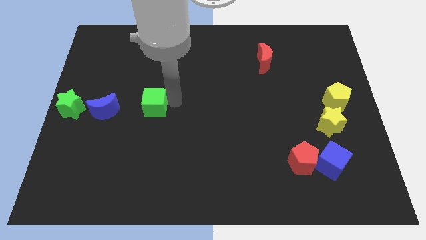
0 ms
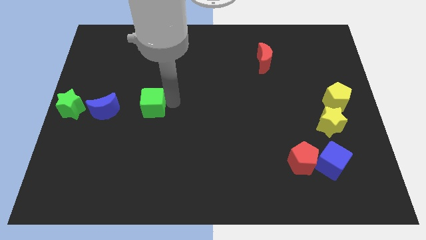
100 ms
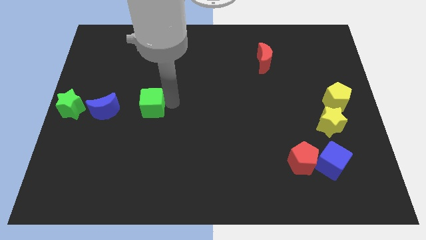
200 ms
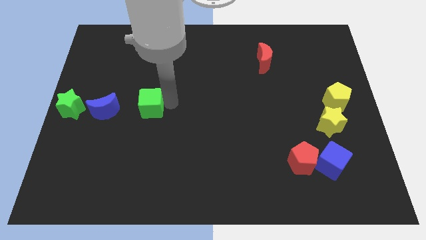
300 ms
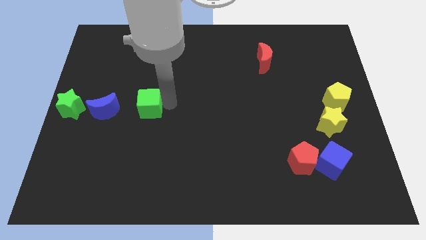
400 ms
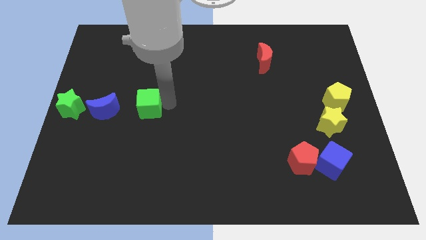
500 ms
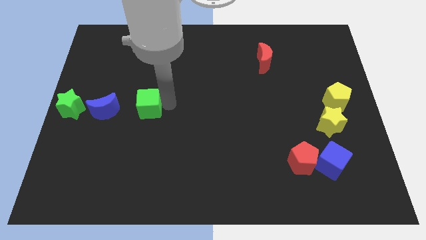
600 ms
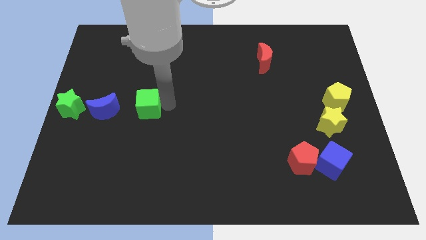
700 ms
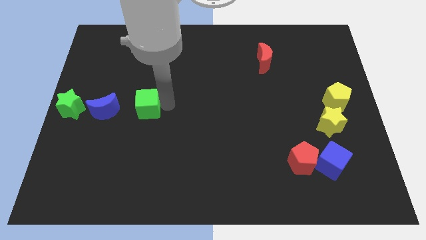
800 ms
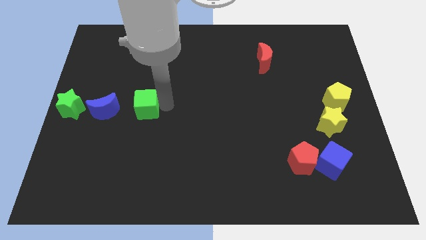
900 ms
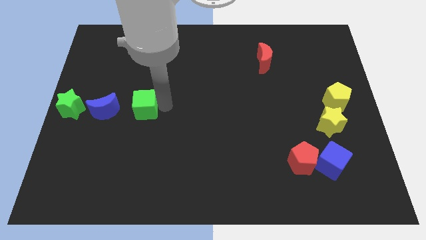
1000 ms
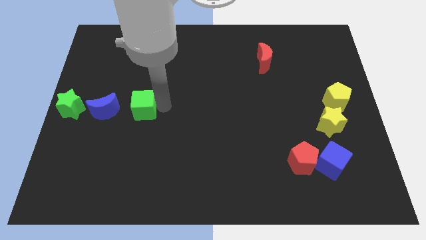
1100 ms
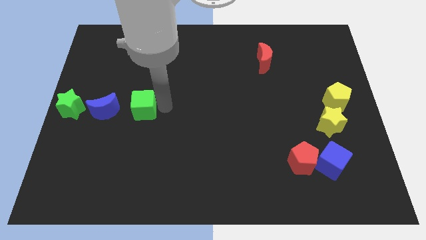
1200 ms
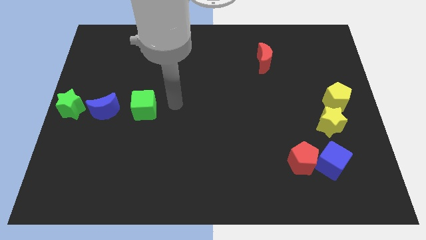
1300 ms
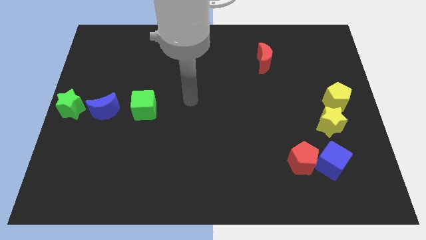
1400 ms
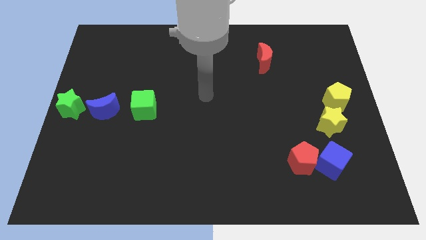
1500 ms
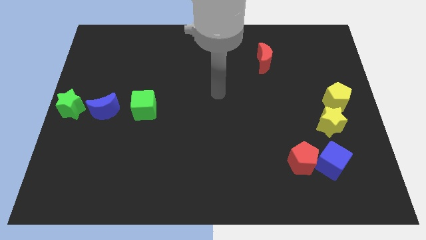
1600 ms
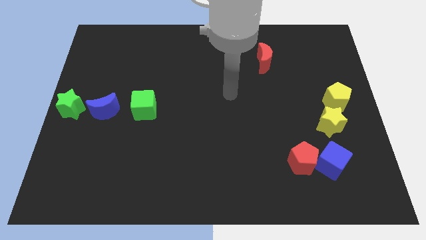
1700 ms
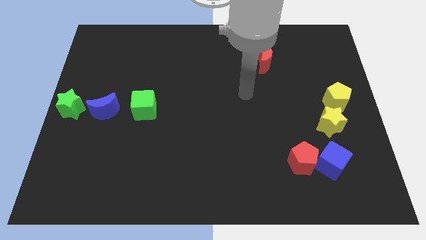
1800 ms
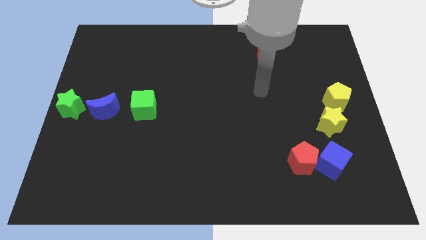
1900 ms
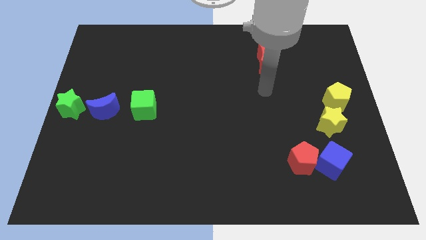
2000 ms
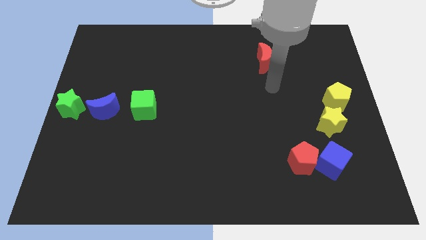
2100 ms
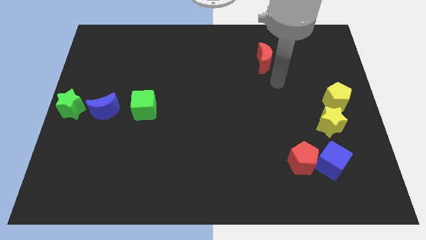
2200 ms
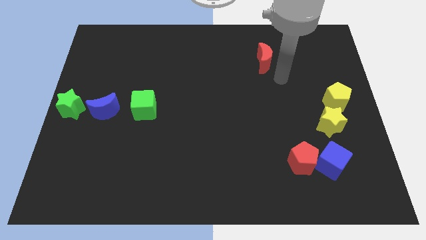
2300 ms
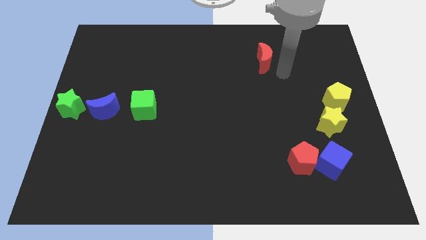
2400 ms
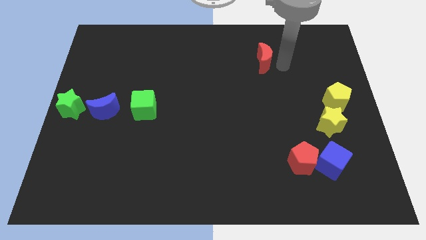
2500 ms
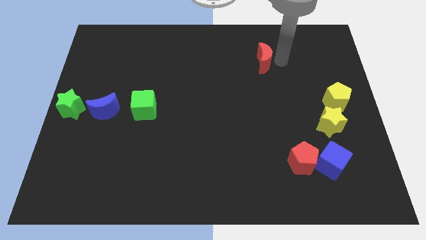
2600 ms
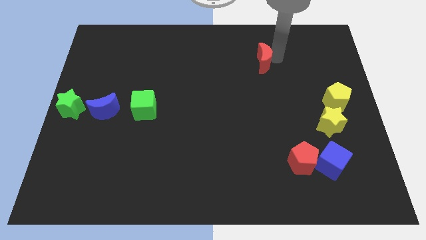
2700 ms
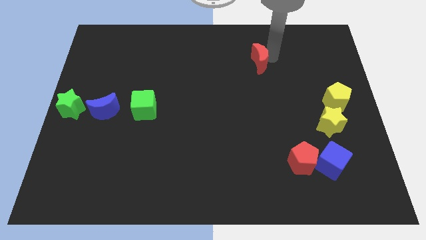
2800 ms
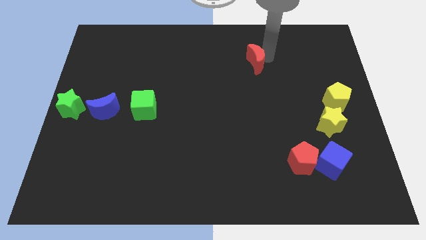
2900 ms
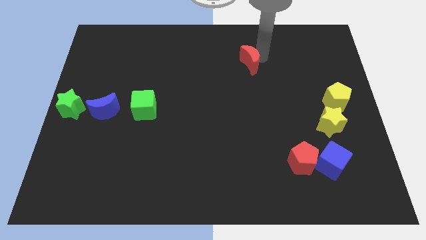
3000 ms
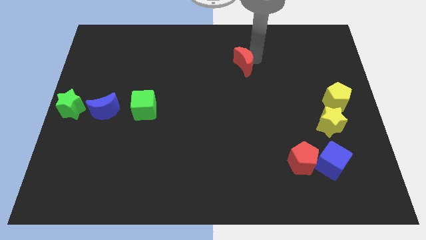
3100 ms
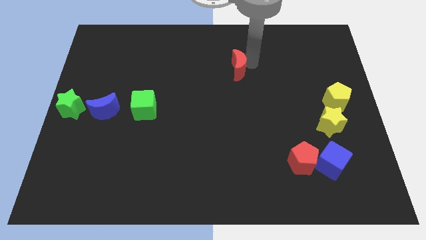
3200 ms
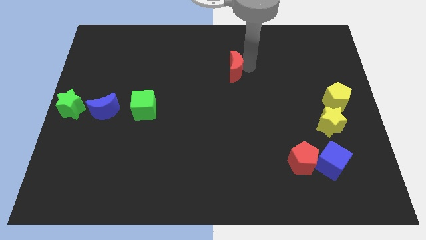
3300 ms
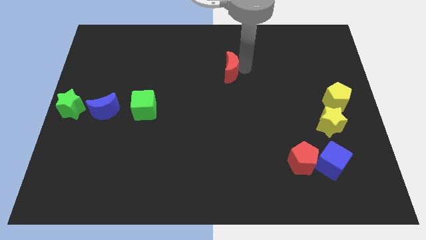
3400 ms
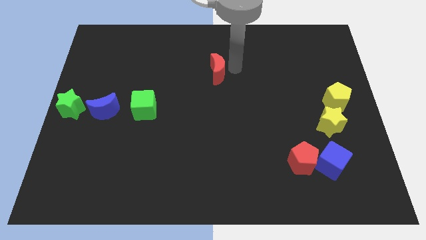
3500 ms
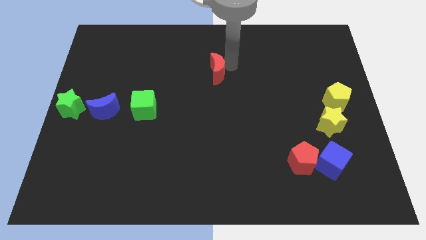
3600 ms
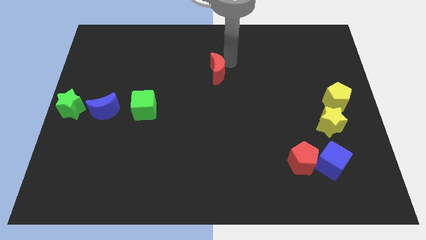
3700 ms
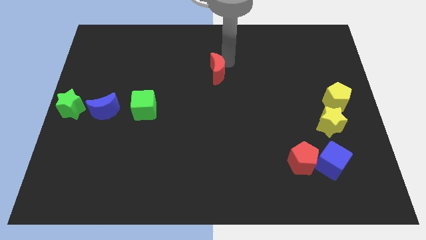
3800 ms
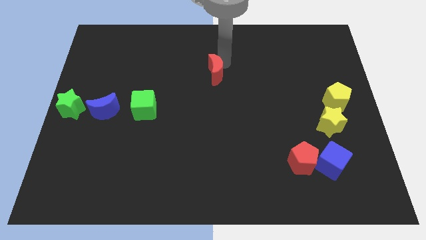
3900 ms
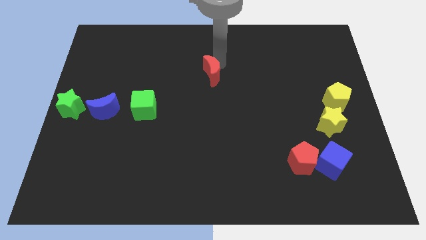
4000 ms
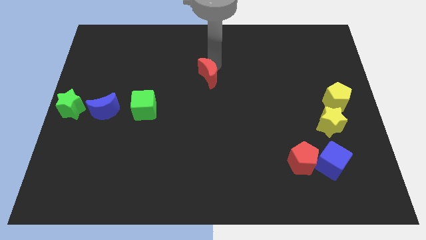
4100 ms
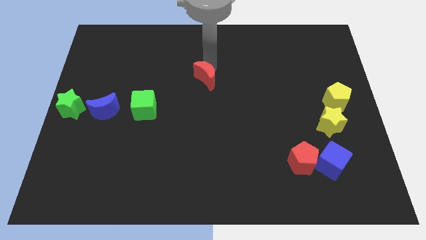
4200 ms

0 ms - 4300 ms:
place the red moon diagonal to the green cube

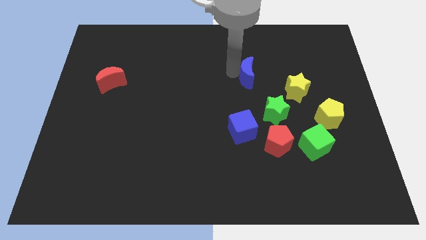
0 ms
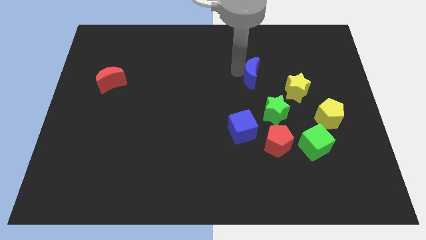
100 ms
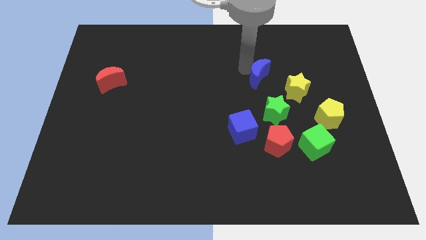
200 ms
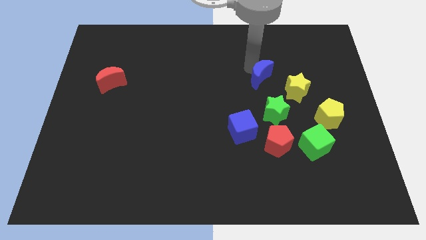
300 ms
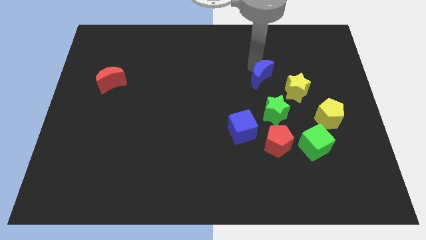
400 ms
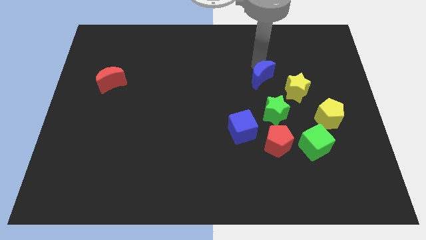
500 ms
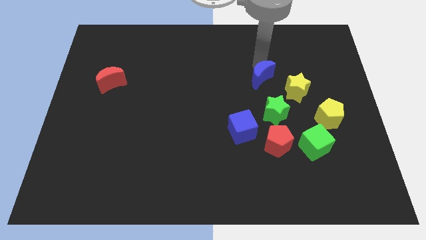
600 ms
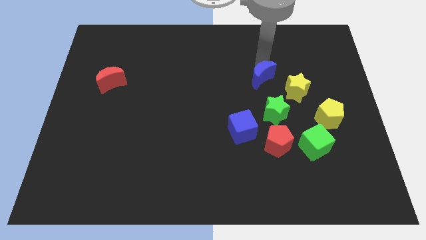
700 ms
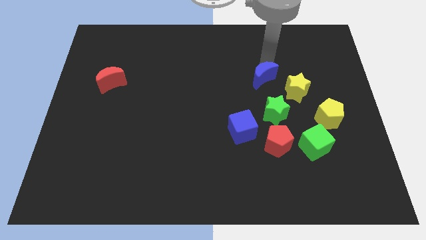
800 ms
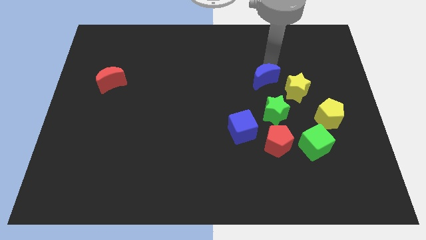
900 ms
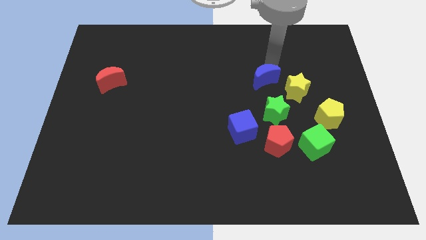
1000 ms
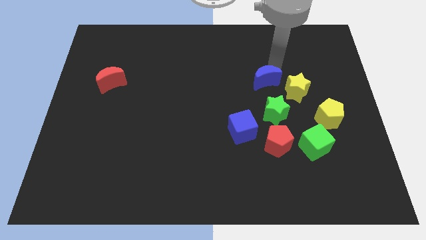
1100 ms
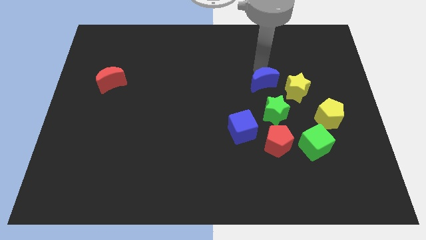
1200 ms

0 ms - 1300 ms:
push blue crescent above green star

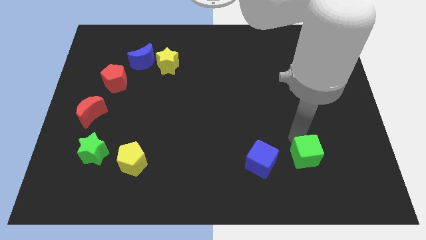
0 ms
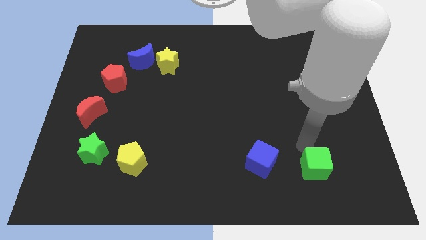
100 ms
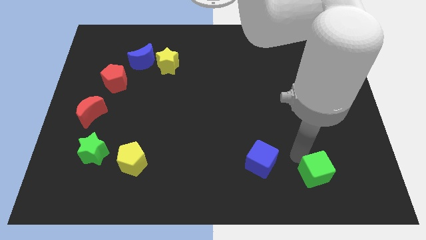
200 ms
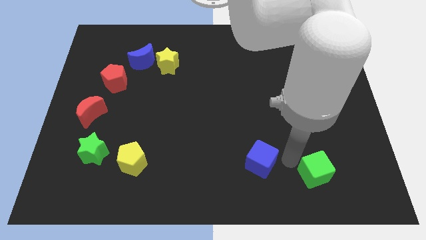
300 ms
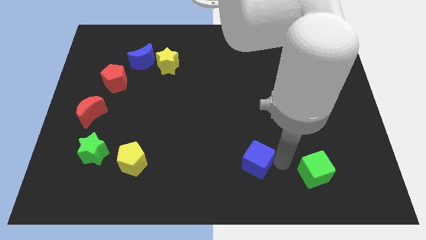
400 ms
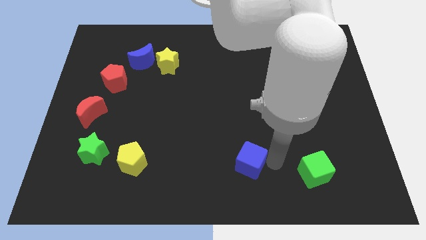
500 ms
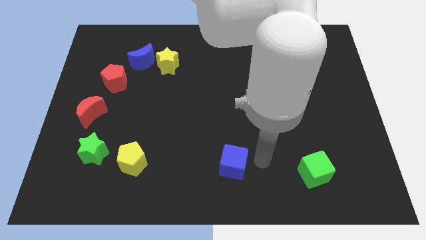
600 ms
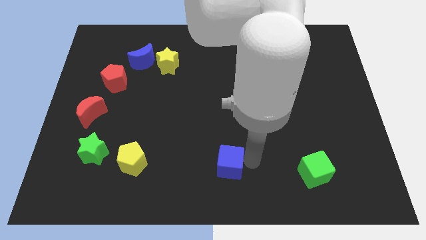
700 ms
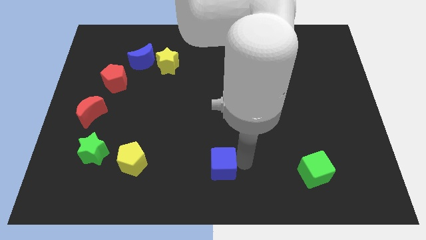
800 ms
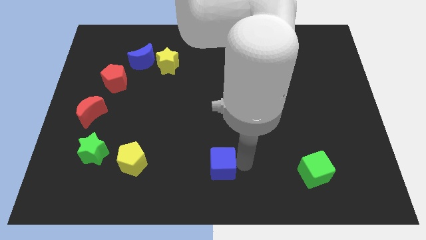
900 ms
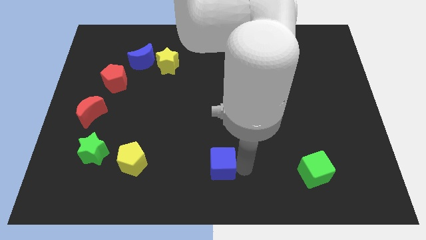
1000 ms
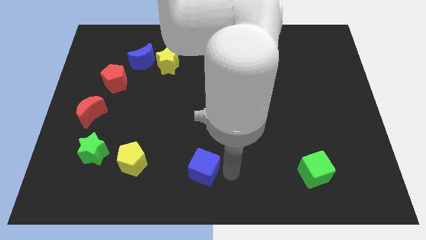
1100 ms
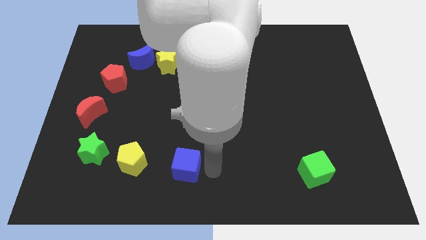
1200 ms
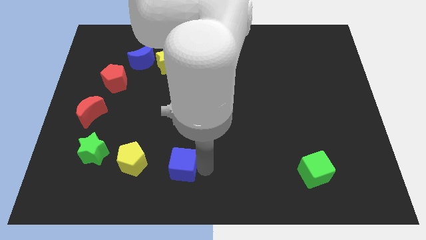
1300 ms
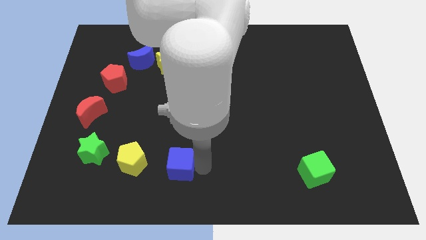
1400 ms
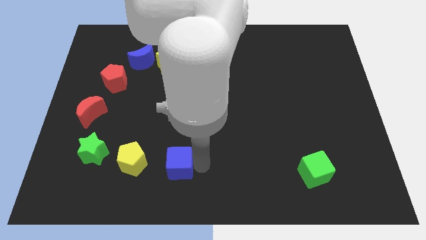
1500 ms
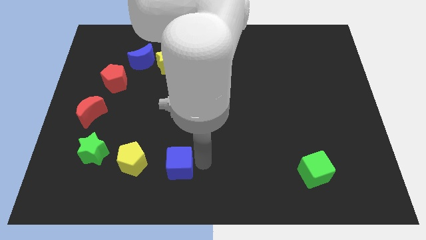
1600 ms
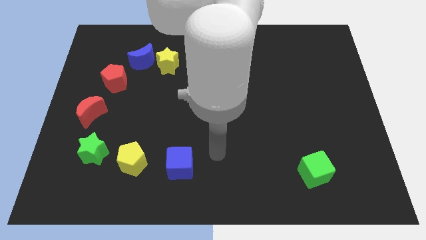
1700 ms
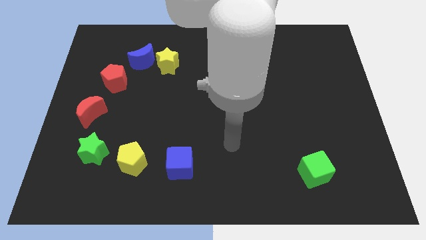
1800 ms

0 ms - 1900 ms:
push the blue cube towards the yellow pentagon

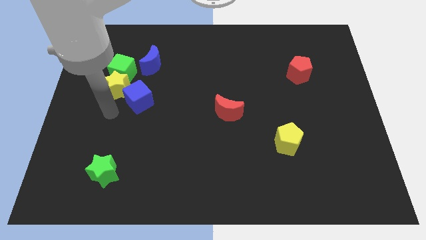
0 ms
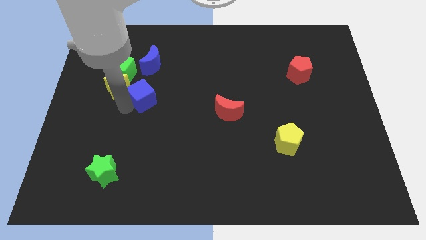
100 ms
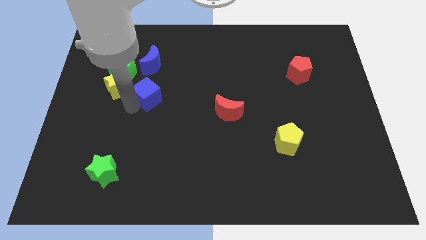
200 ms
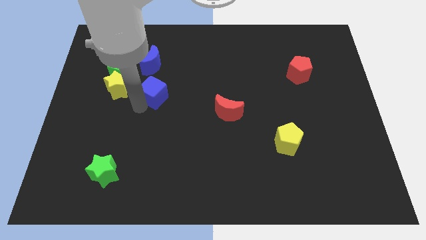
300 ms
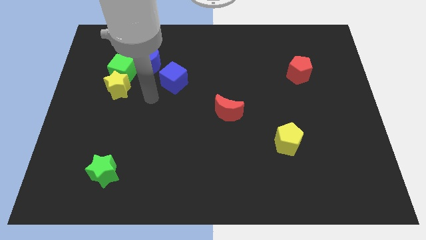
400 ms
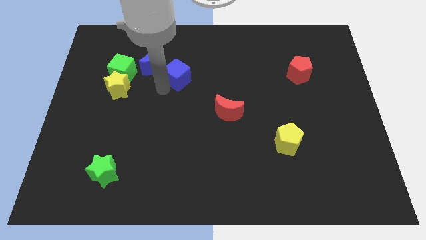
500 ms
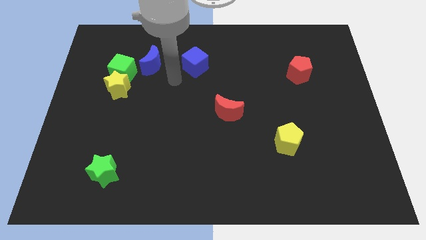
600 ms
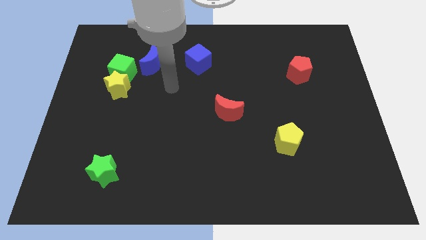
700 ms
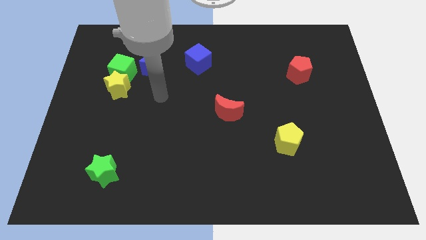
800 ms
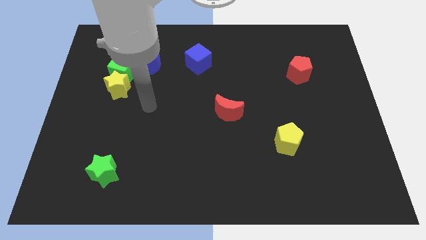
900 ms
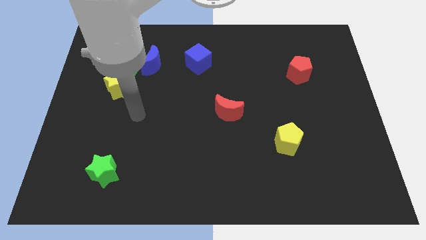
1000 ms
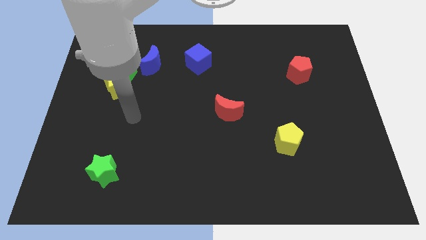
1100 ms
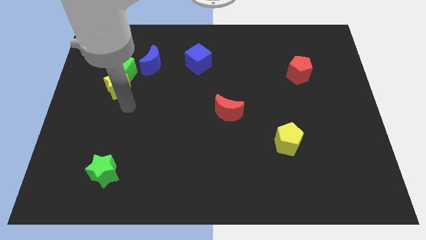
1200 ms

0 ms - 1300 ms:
move the blue cube to the right of the blue crescent
